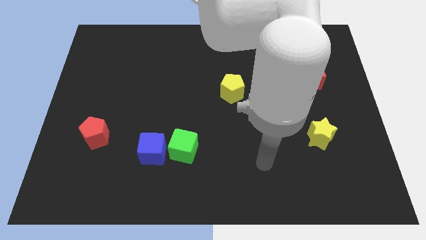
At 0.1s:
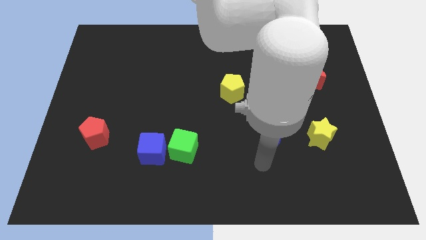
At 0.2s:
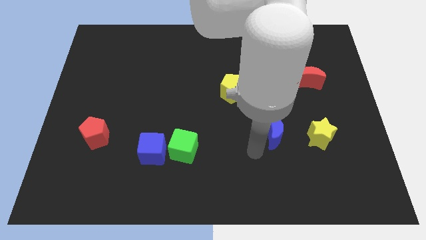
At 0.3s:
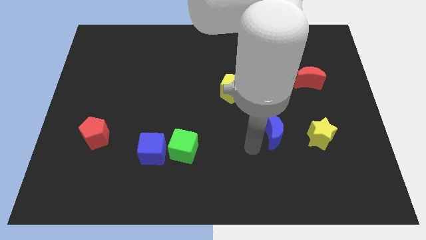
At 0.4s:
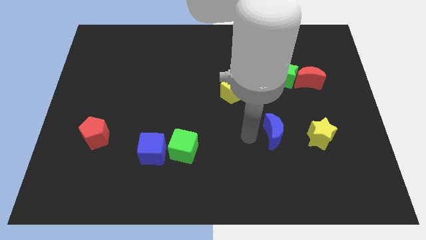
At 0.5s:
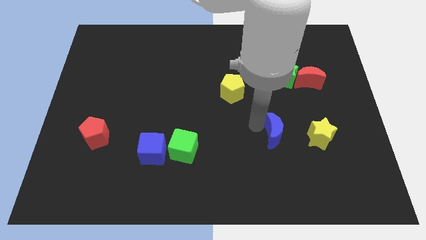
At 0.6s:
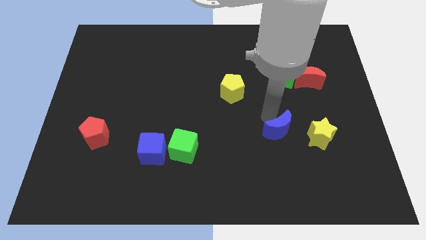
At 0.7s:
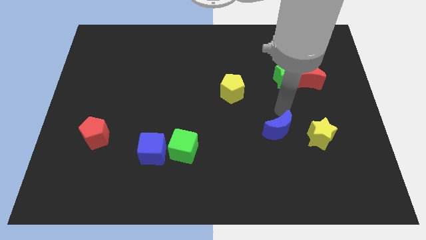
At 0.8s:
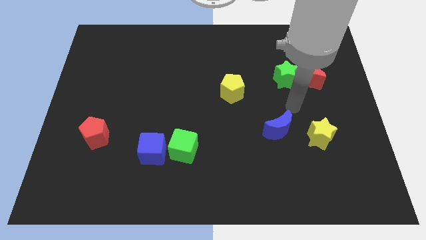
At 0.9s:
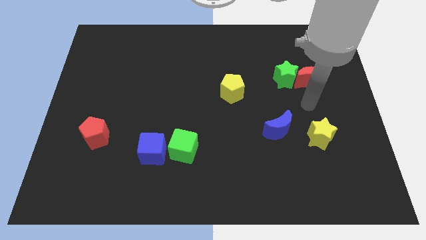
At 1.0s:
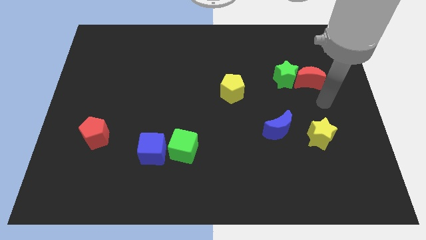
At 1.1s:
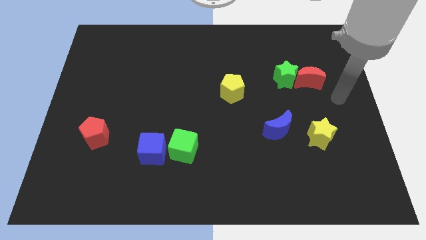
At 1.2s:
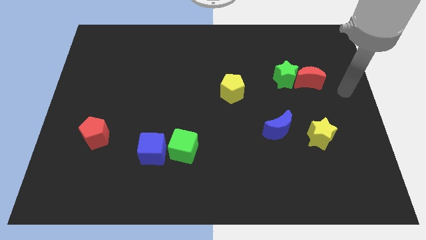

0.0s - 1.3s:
slightly move the blue crescent to the right of the board

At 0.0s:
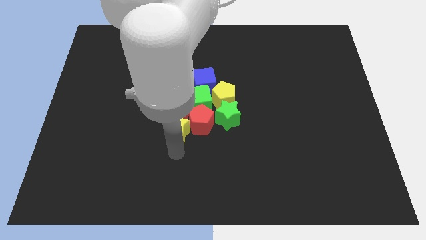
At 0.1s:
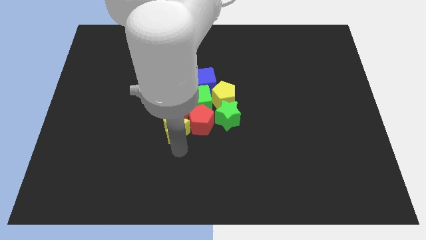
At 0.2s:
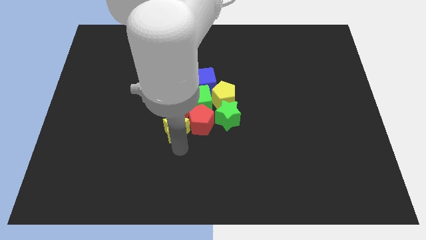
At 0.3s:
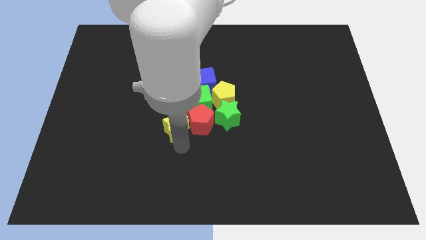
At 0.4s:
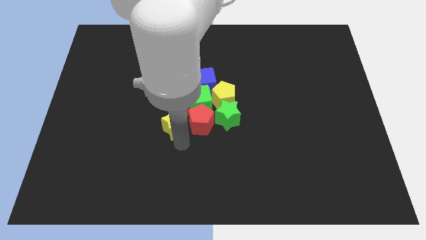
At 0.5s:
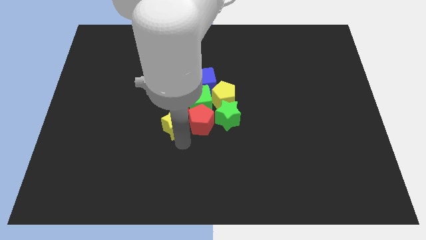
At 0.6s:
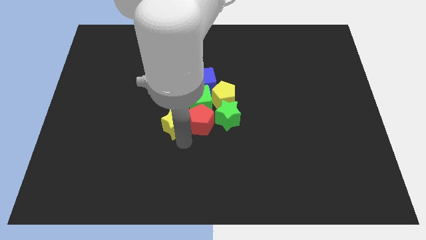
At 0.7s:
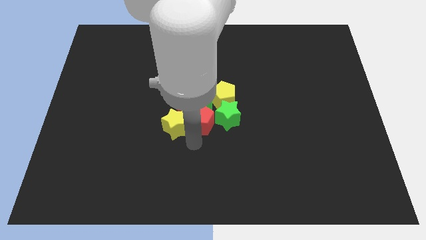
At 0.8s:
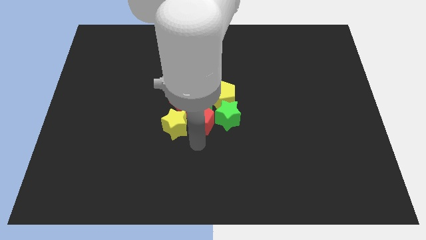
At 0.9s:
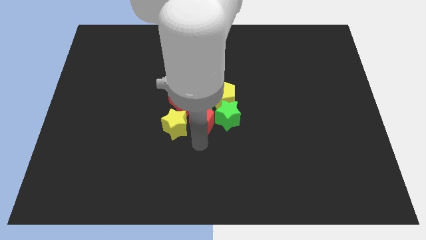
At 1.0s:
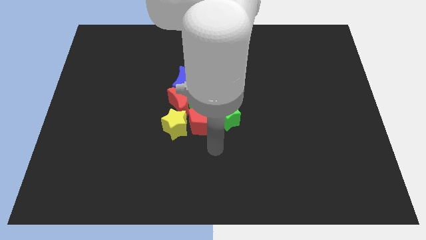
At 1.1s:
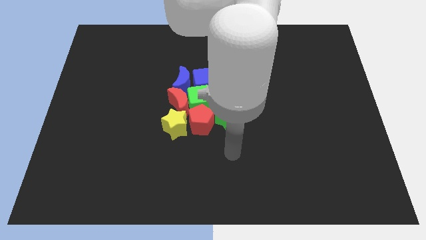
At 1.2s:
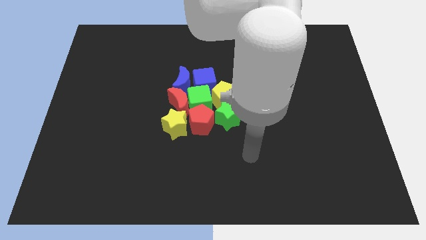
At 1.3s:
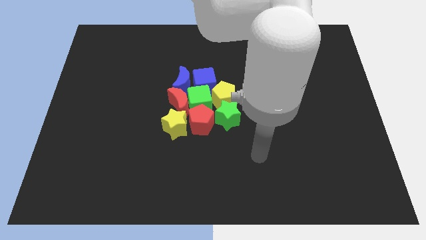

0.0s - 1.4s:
place the yellow star parallel left to the red pentagon

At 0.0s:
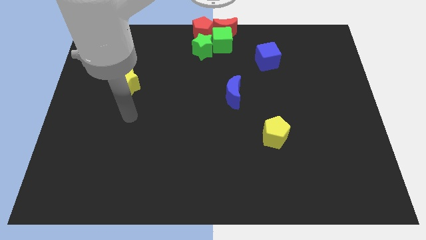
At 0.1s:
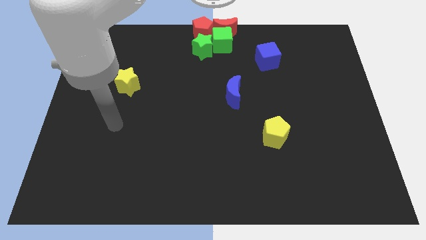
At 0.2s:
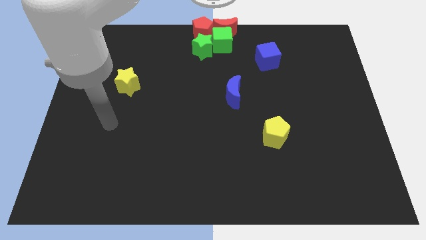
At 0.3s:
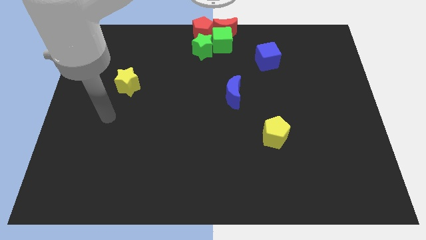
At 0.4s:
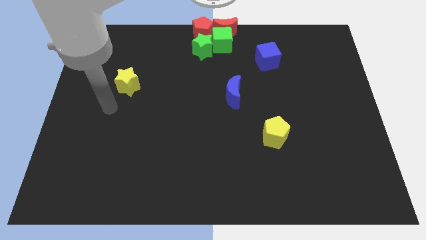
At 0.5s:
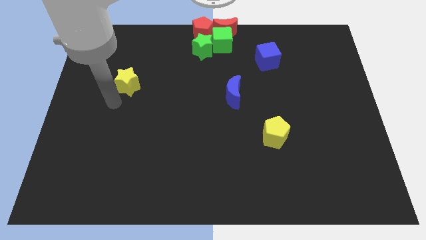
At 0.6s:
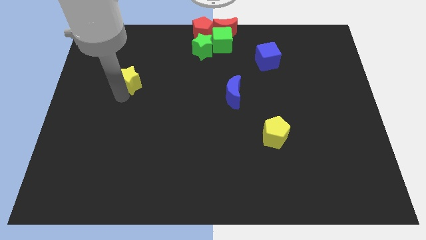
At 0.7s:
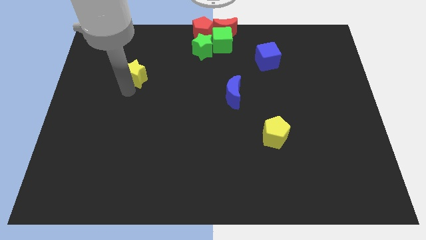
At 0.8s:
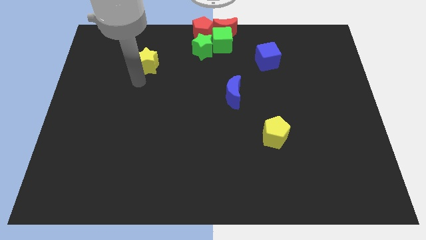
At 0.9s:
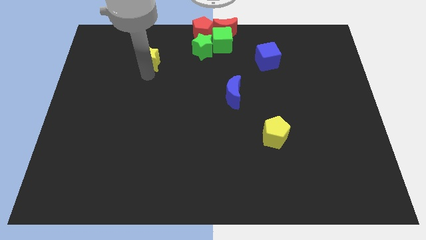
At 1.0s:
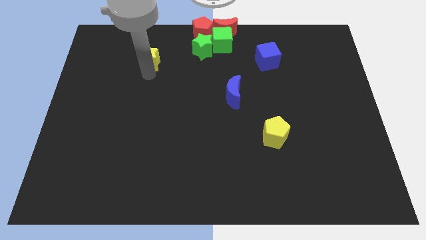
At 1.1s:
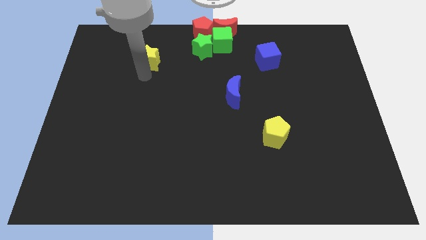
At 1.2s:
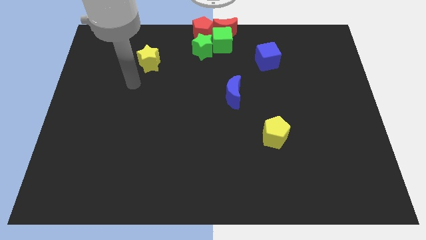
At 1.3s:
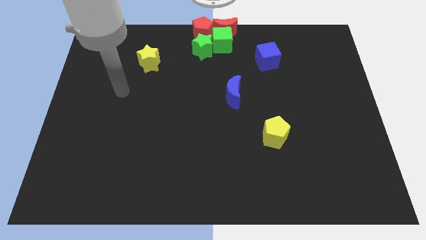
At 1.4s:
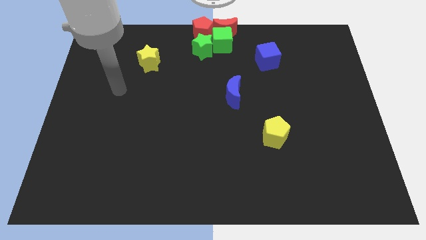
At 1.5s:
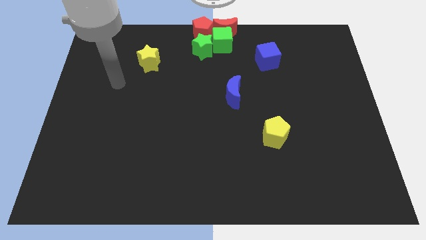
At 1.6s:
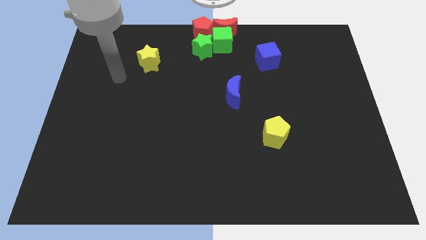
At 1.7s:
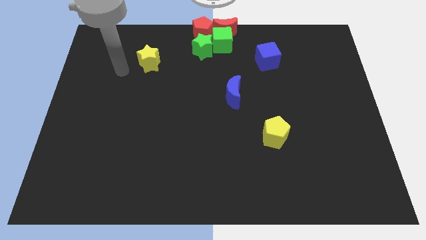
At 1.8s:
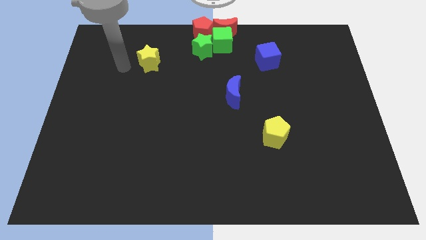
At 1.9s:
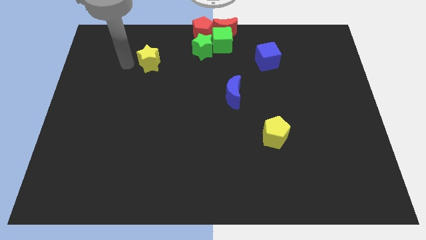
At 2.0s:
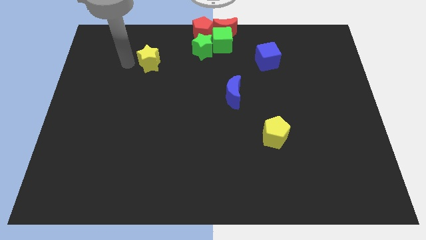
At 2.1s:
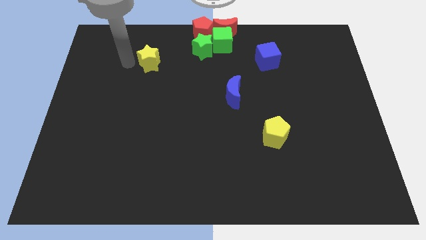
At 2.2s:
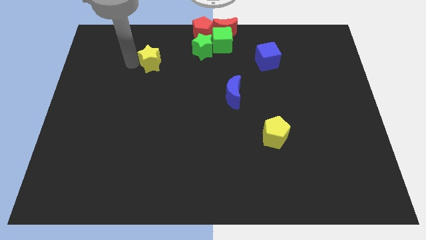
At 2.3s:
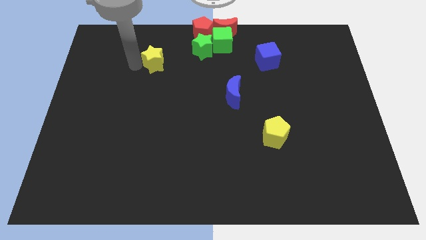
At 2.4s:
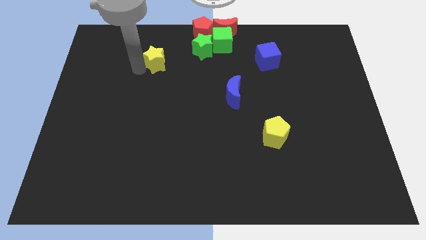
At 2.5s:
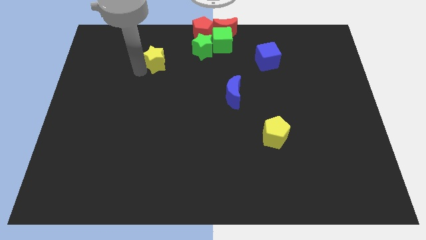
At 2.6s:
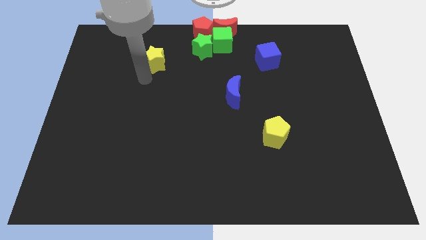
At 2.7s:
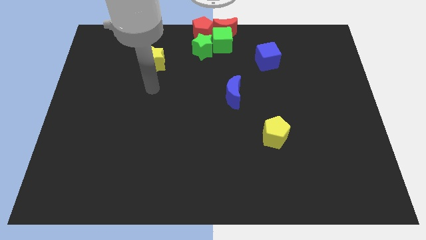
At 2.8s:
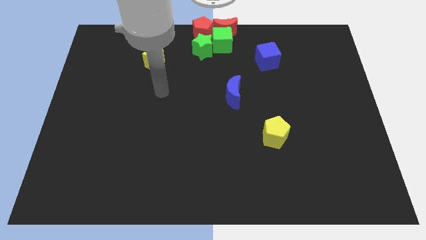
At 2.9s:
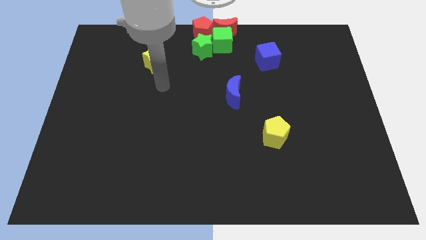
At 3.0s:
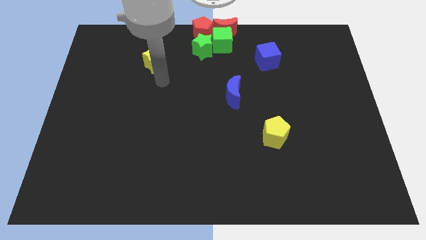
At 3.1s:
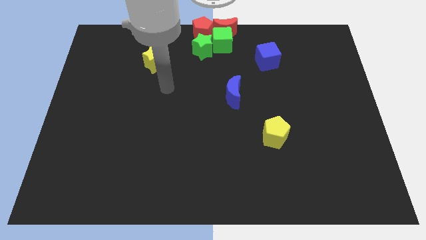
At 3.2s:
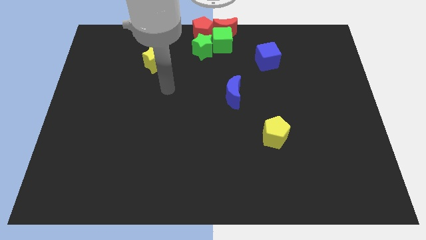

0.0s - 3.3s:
move the yellow star towards the top center

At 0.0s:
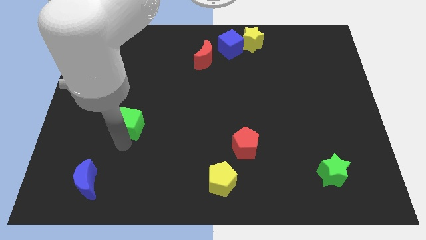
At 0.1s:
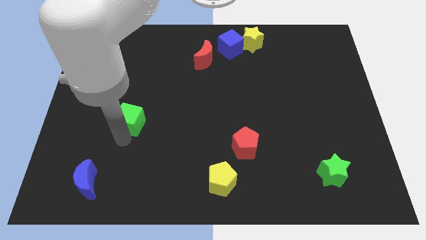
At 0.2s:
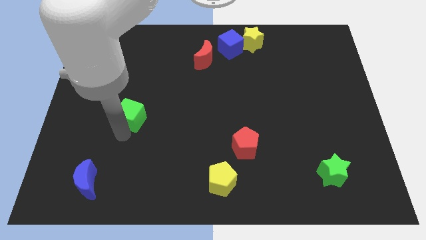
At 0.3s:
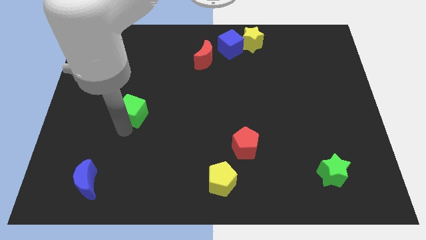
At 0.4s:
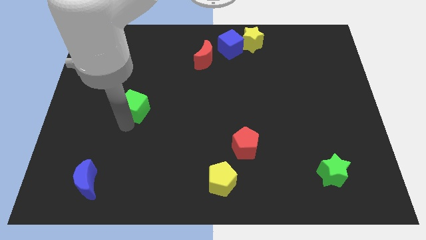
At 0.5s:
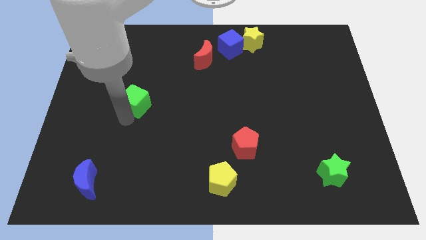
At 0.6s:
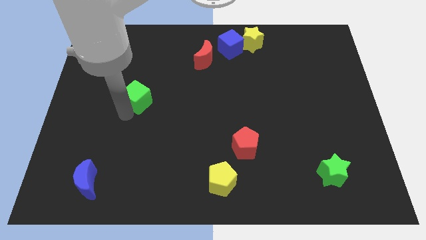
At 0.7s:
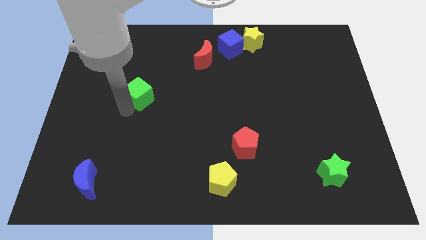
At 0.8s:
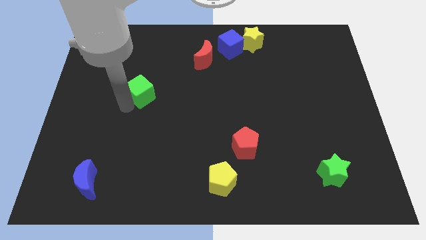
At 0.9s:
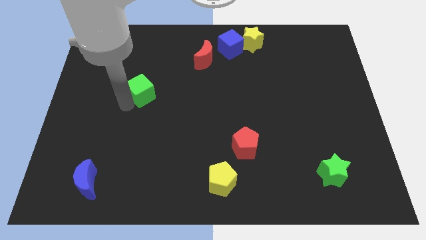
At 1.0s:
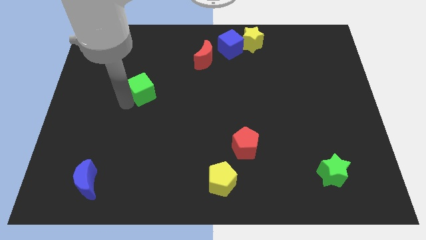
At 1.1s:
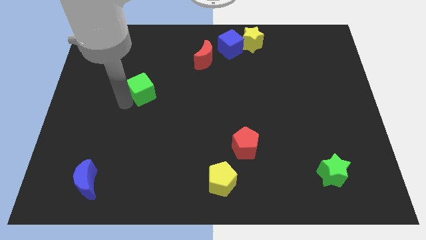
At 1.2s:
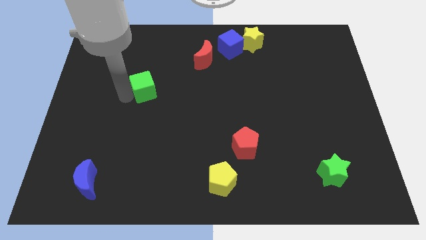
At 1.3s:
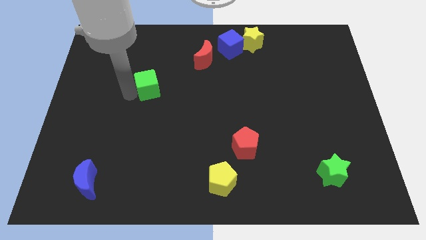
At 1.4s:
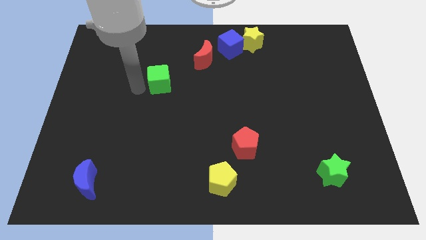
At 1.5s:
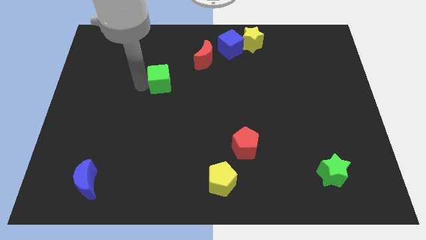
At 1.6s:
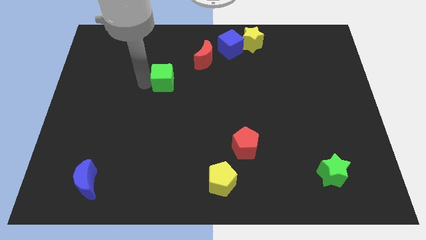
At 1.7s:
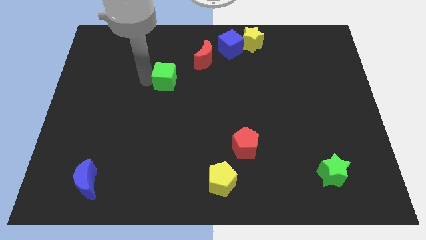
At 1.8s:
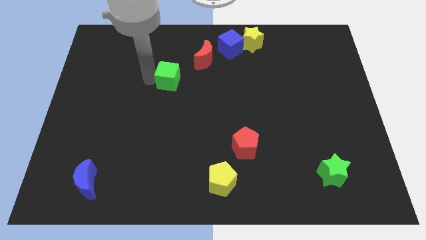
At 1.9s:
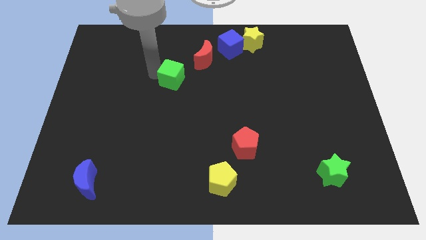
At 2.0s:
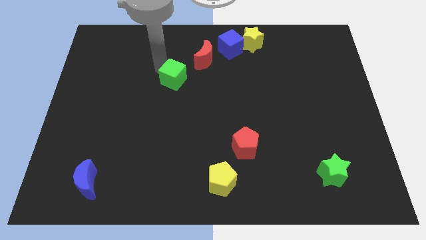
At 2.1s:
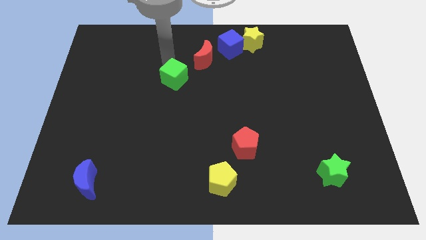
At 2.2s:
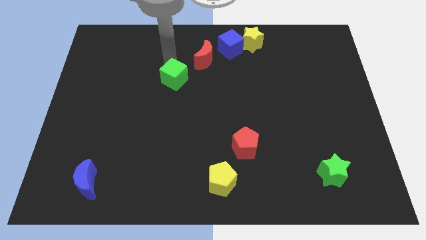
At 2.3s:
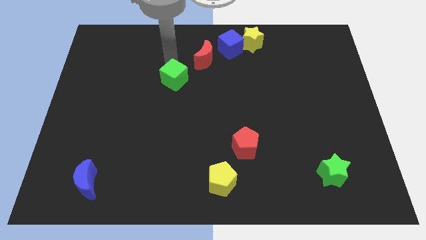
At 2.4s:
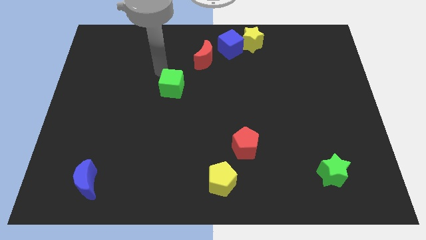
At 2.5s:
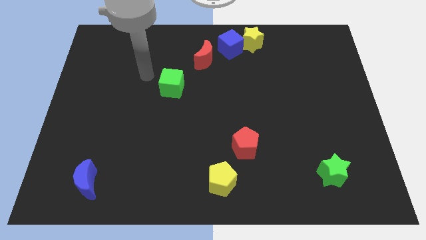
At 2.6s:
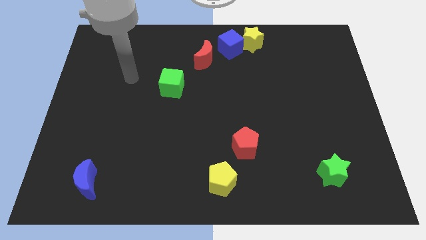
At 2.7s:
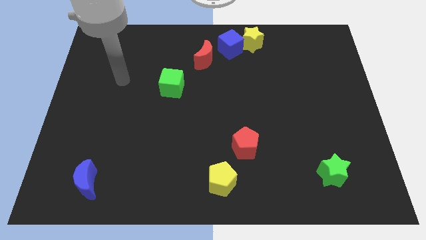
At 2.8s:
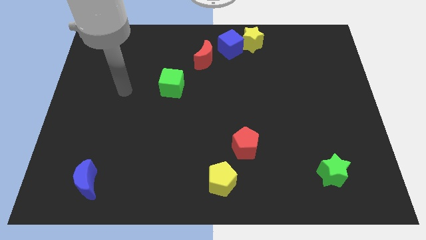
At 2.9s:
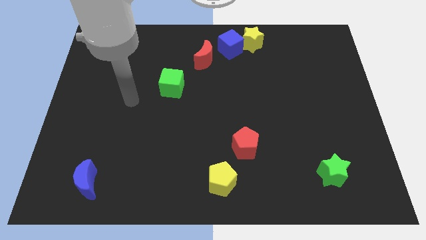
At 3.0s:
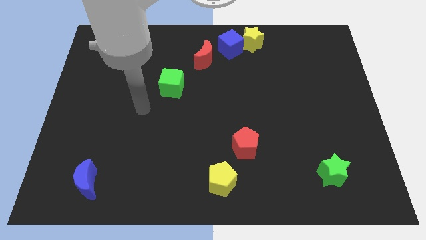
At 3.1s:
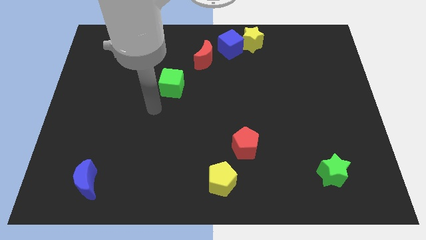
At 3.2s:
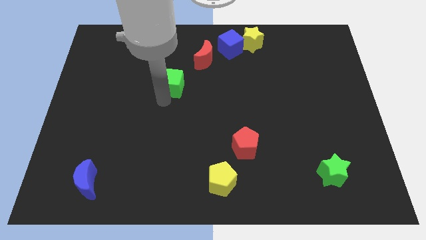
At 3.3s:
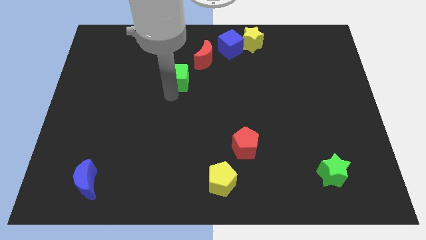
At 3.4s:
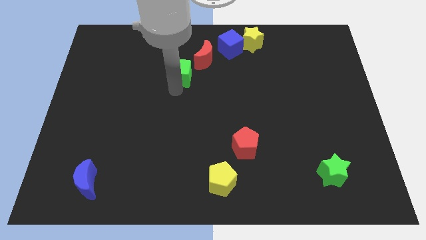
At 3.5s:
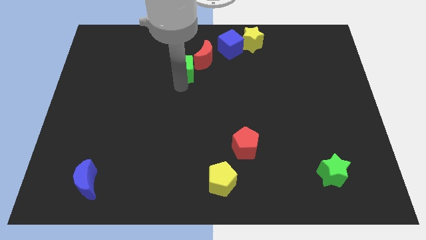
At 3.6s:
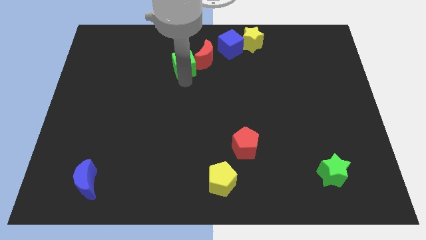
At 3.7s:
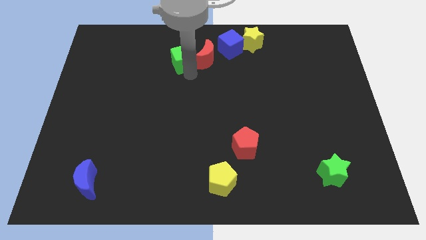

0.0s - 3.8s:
drag the green cube to the left side of the red moon
